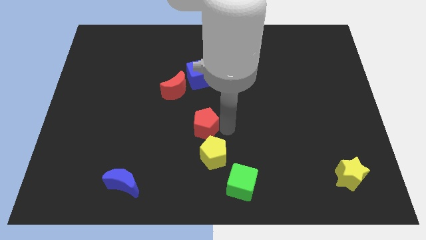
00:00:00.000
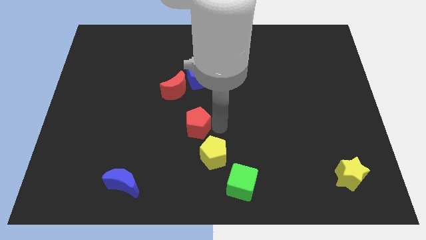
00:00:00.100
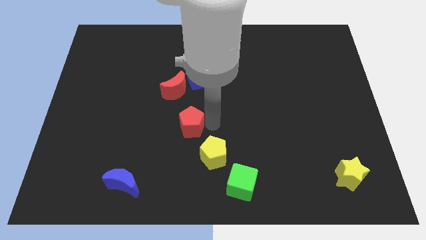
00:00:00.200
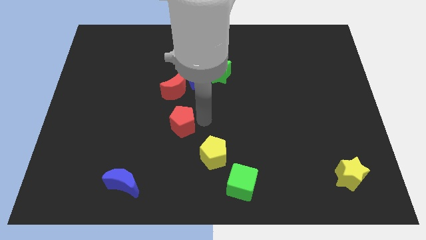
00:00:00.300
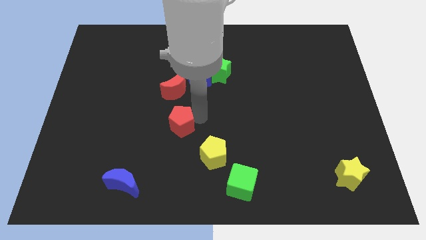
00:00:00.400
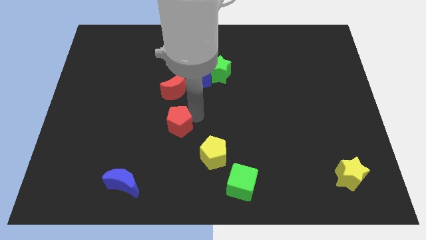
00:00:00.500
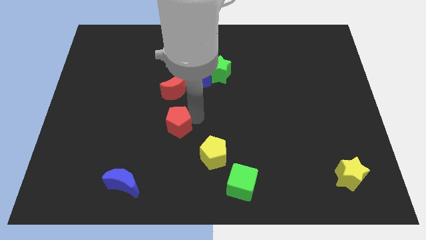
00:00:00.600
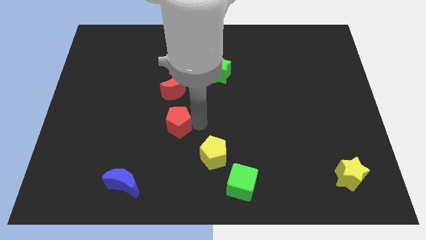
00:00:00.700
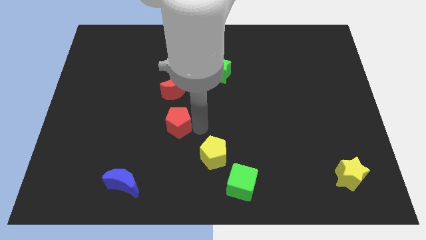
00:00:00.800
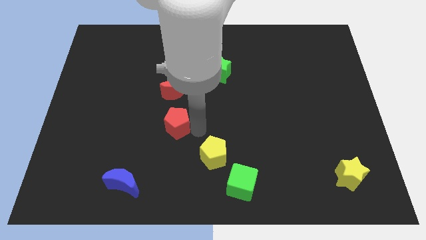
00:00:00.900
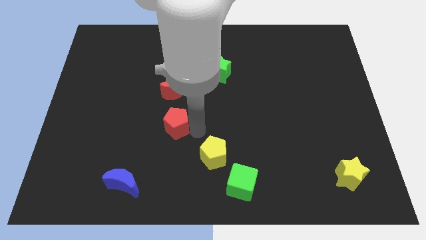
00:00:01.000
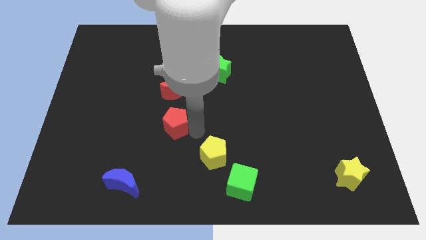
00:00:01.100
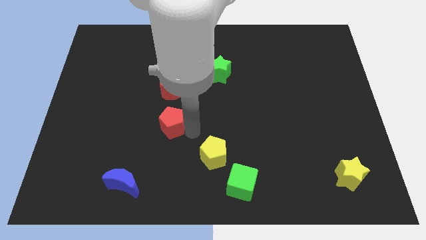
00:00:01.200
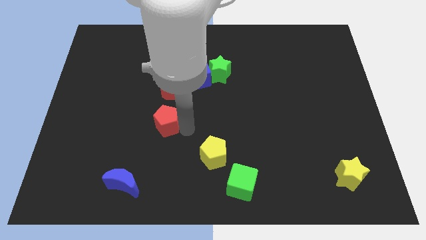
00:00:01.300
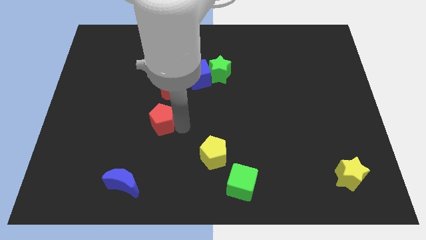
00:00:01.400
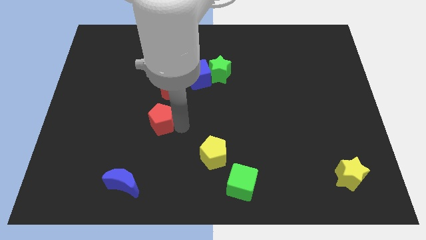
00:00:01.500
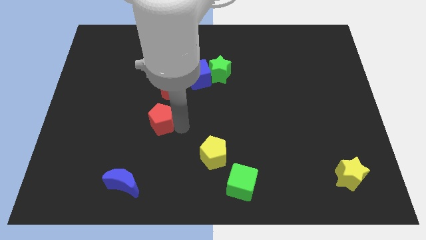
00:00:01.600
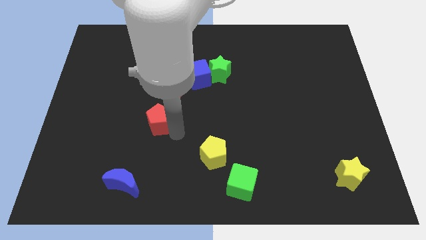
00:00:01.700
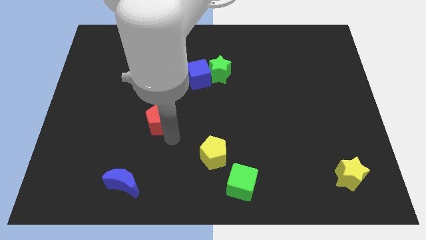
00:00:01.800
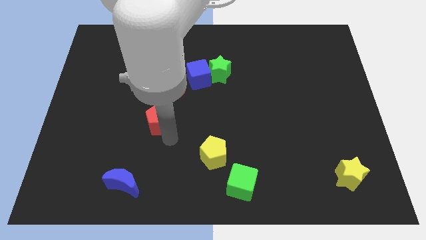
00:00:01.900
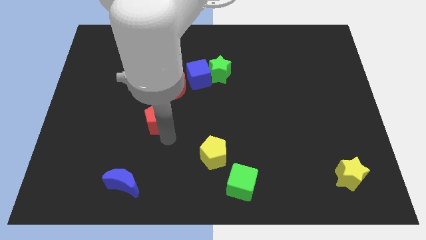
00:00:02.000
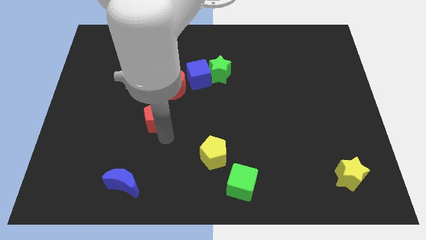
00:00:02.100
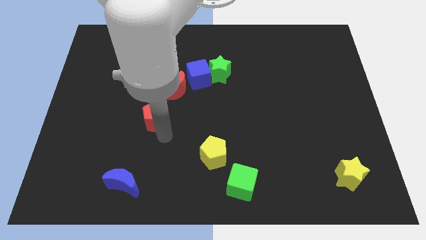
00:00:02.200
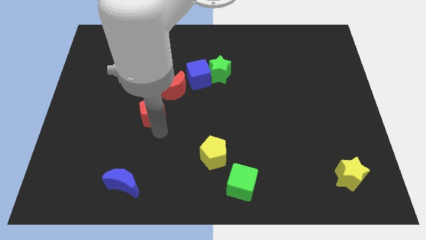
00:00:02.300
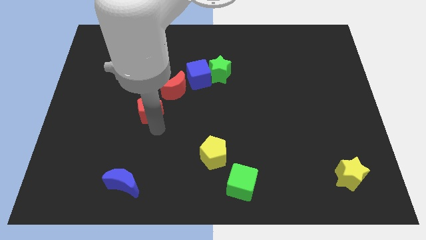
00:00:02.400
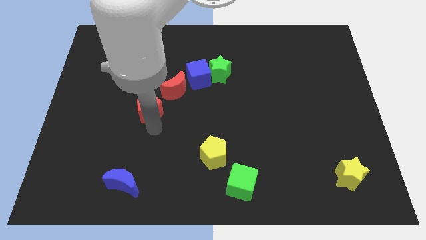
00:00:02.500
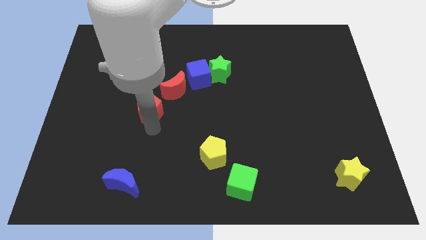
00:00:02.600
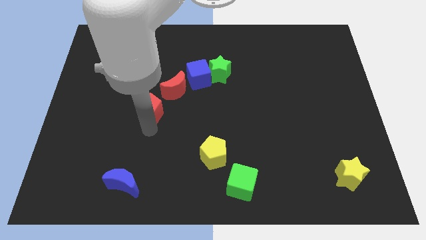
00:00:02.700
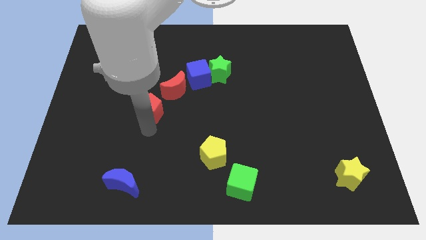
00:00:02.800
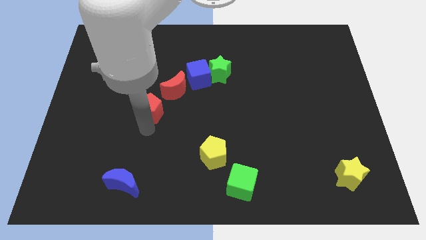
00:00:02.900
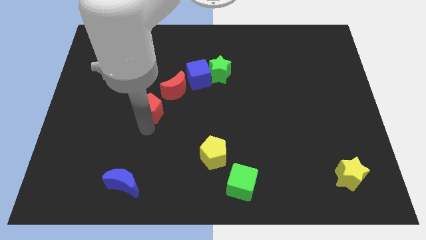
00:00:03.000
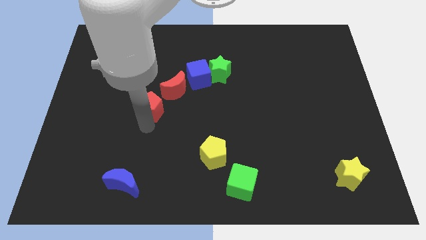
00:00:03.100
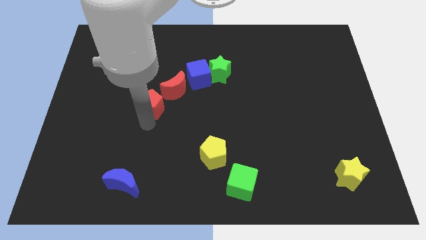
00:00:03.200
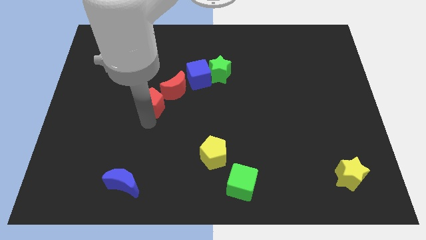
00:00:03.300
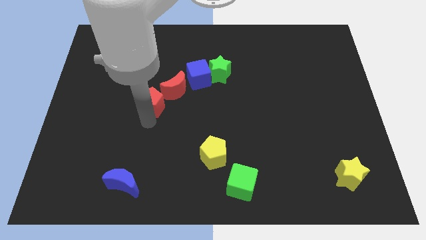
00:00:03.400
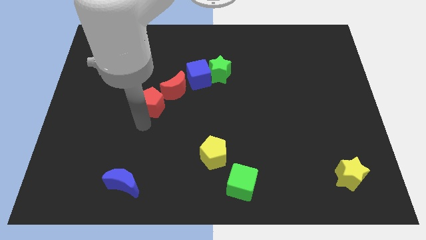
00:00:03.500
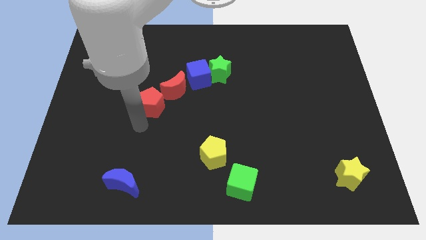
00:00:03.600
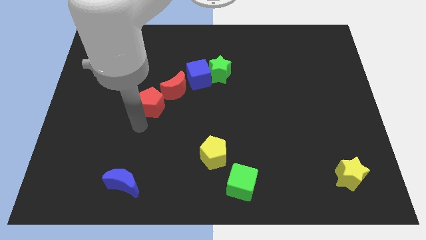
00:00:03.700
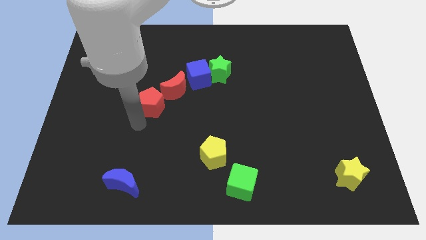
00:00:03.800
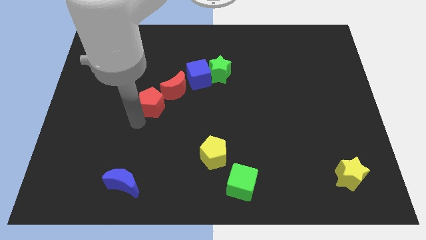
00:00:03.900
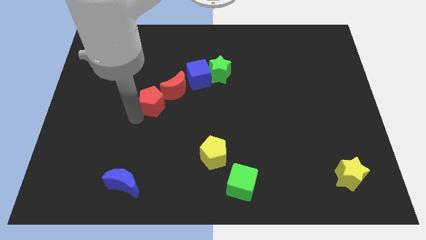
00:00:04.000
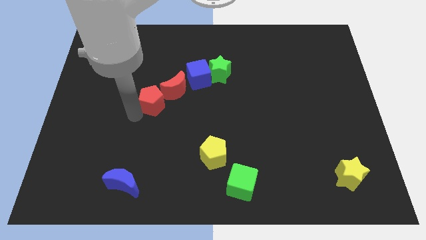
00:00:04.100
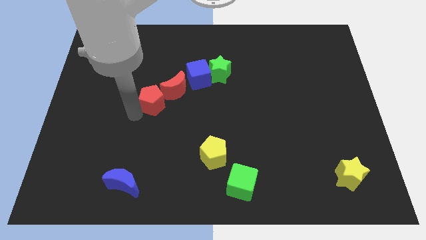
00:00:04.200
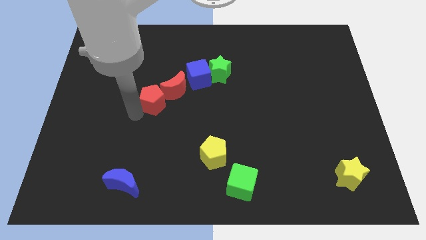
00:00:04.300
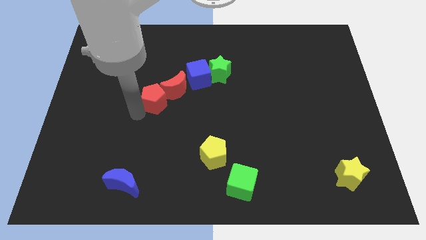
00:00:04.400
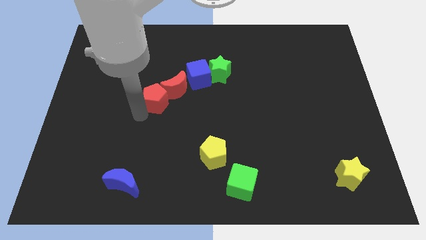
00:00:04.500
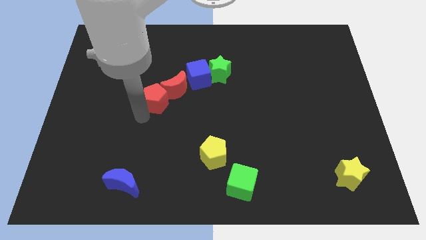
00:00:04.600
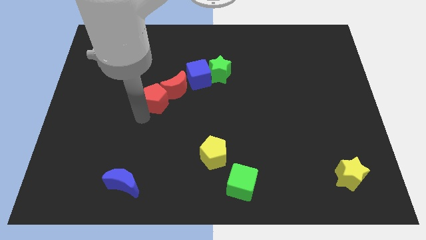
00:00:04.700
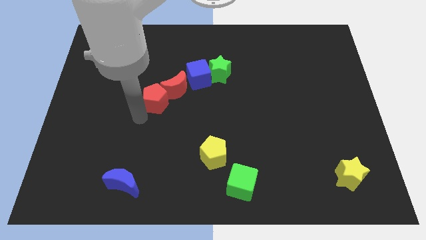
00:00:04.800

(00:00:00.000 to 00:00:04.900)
move the red pentagon to the left of the red crescent

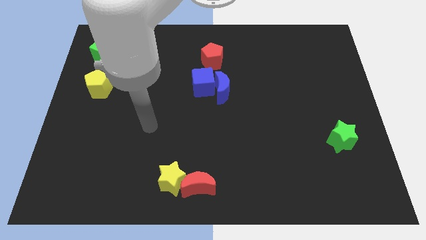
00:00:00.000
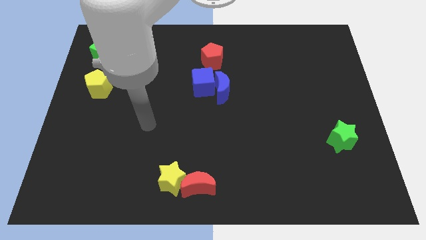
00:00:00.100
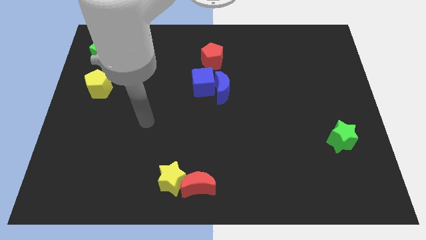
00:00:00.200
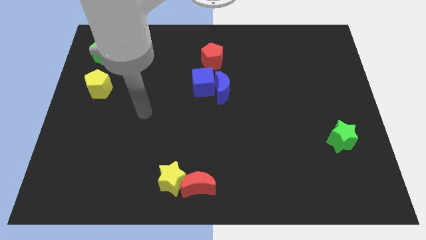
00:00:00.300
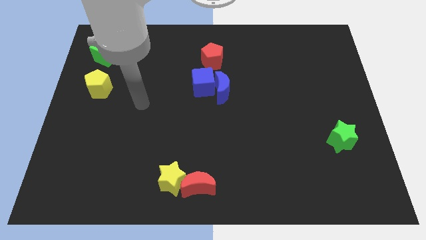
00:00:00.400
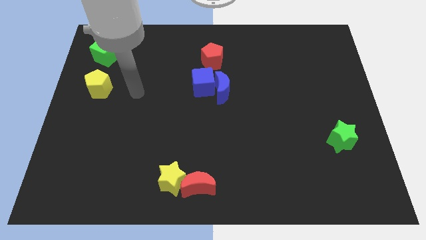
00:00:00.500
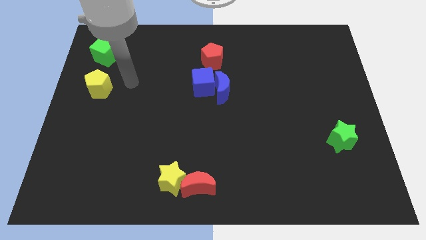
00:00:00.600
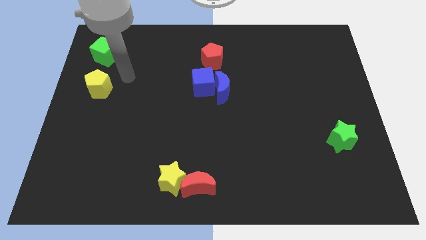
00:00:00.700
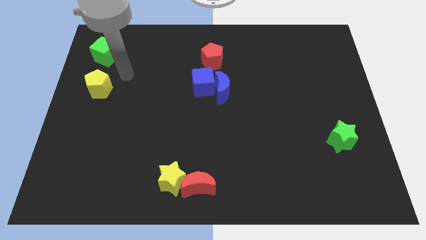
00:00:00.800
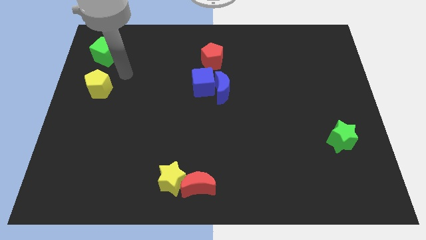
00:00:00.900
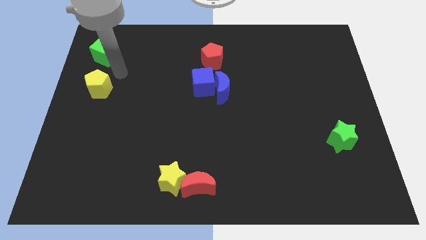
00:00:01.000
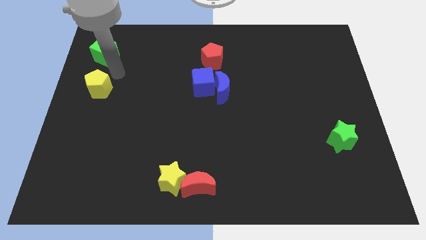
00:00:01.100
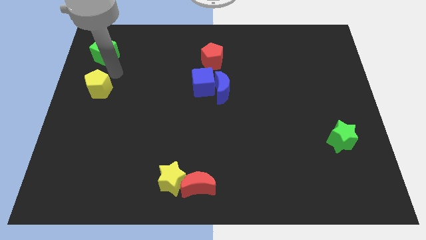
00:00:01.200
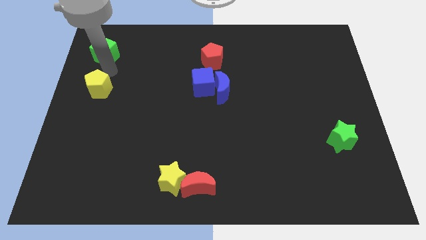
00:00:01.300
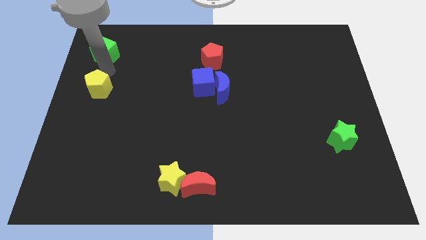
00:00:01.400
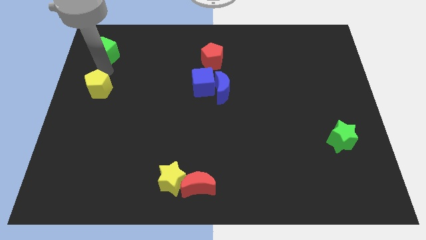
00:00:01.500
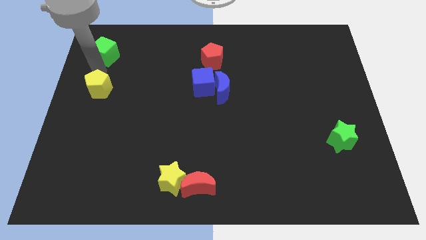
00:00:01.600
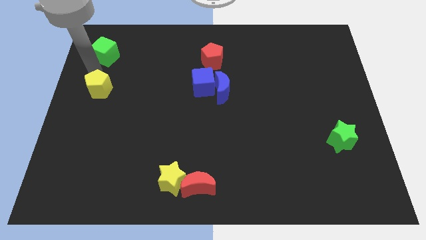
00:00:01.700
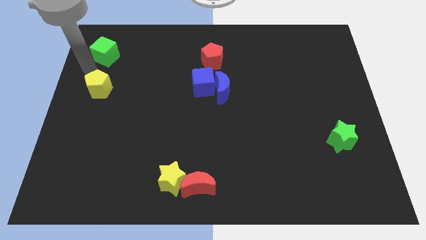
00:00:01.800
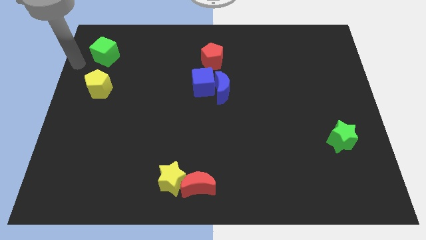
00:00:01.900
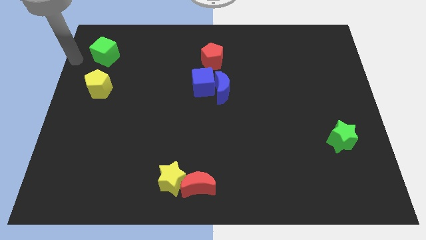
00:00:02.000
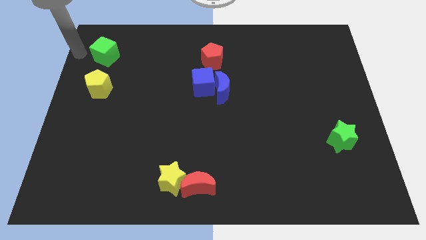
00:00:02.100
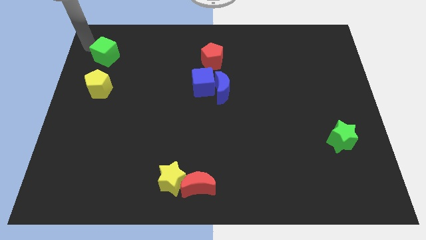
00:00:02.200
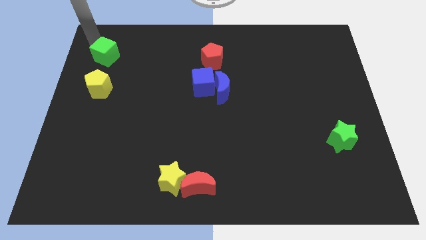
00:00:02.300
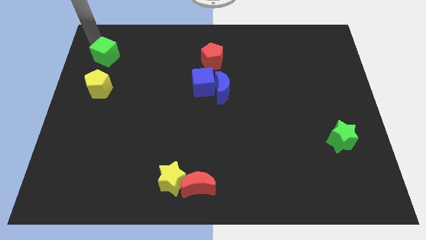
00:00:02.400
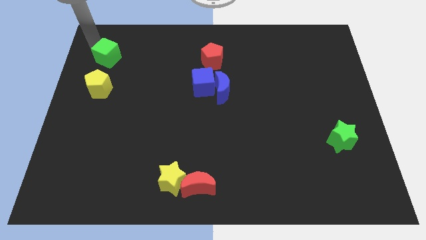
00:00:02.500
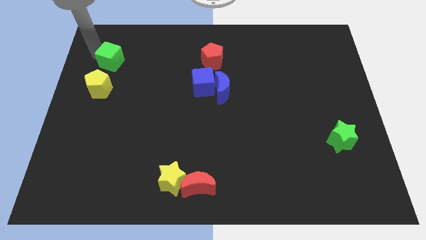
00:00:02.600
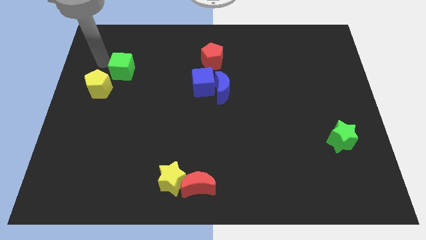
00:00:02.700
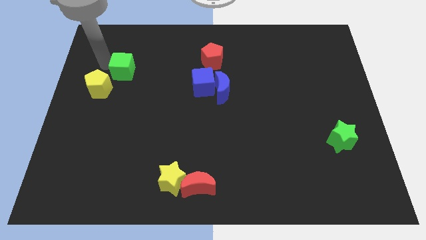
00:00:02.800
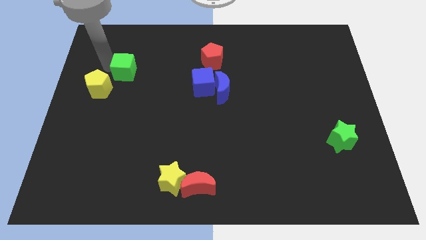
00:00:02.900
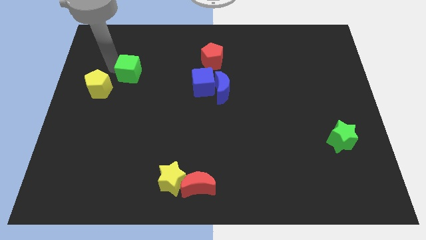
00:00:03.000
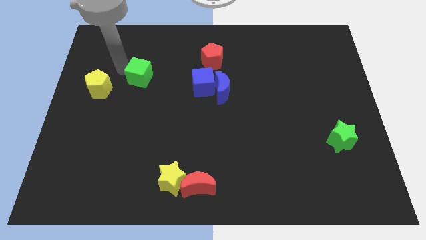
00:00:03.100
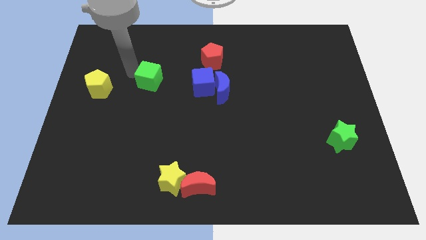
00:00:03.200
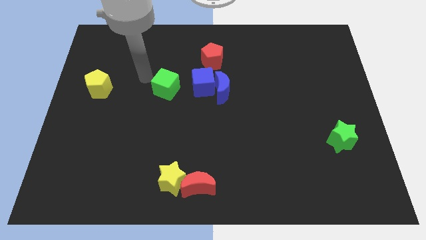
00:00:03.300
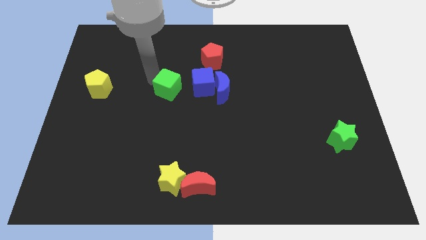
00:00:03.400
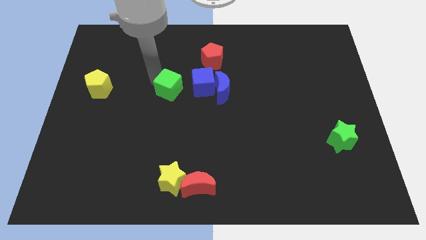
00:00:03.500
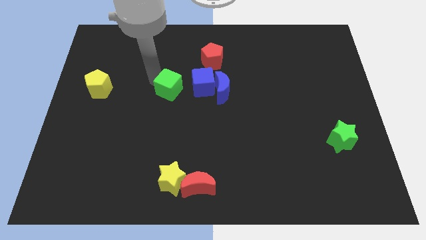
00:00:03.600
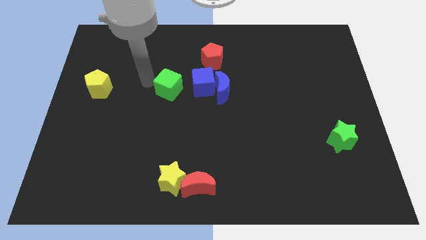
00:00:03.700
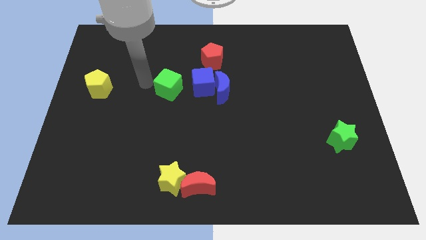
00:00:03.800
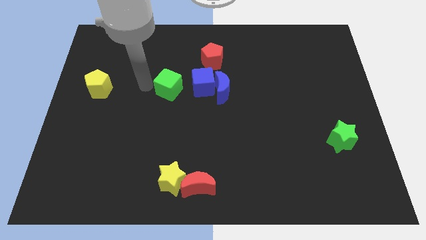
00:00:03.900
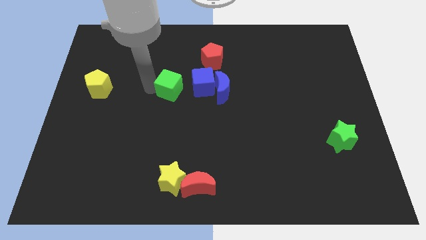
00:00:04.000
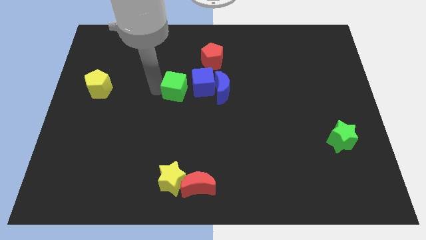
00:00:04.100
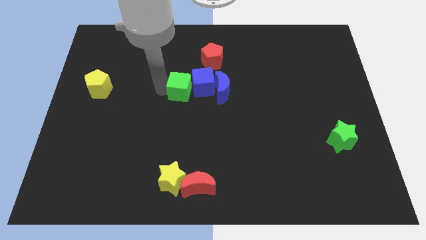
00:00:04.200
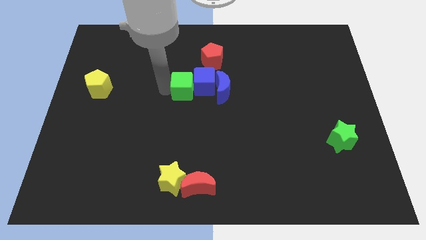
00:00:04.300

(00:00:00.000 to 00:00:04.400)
place the green cube to the left side of blue cube
